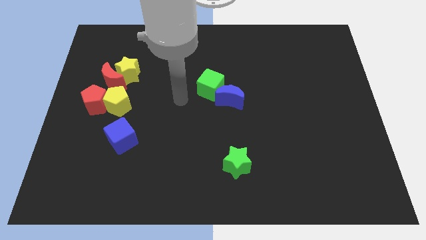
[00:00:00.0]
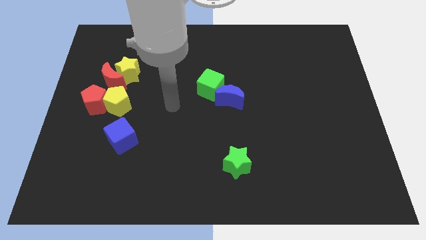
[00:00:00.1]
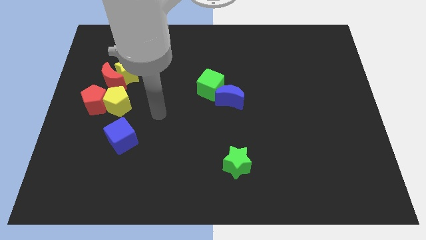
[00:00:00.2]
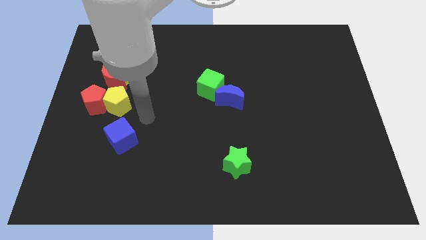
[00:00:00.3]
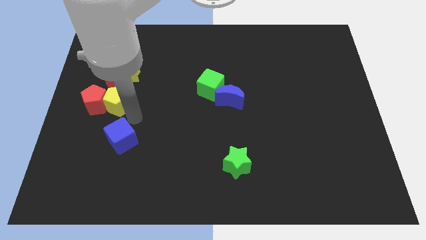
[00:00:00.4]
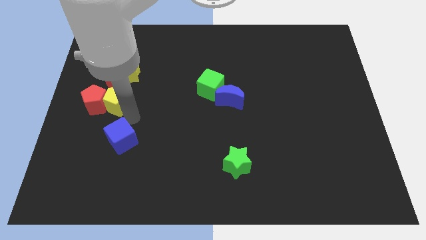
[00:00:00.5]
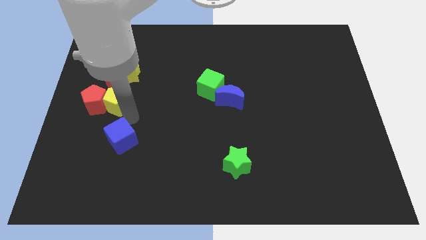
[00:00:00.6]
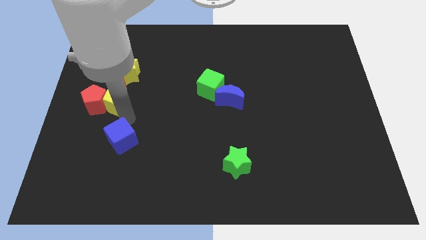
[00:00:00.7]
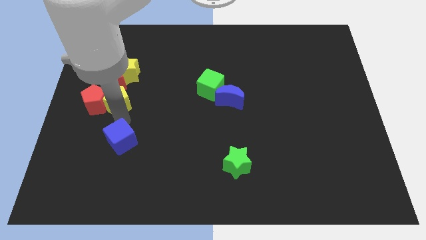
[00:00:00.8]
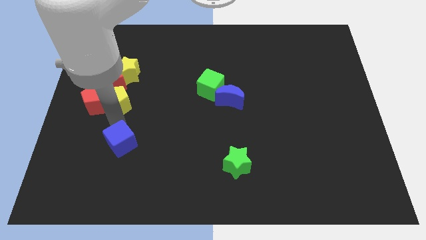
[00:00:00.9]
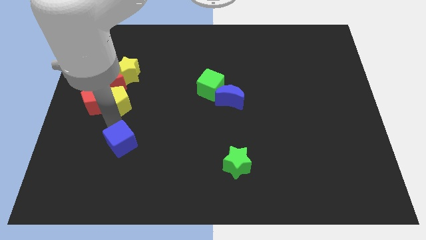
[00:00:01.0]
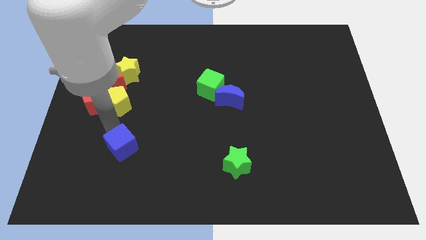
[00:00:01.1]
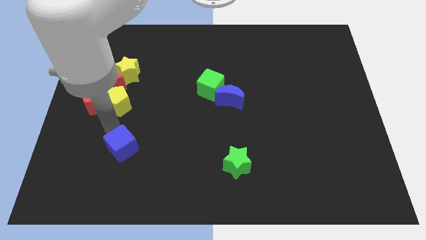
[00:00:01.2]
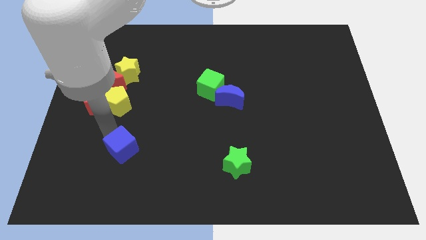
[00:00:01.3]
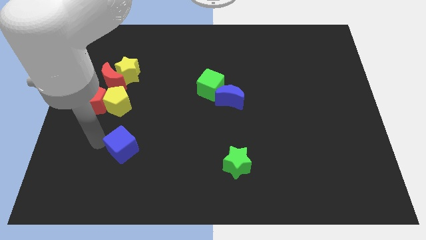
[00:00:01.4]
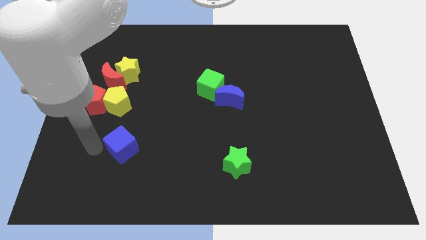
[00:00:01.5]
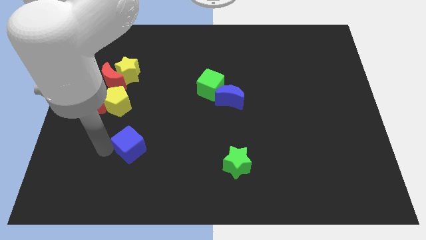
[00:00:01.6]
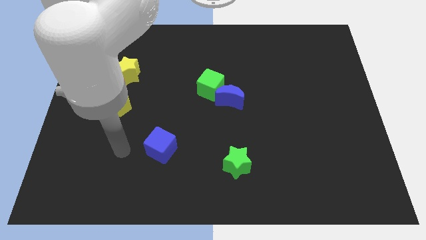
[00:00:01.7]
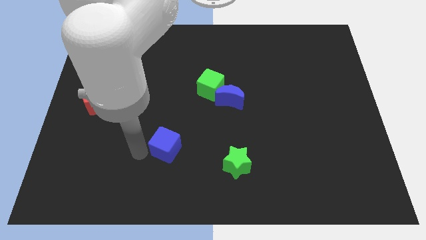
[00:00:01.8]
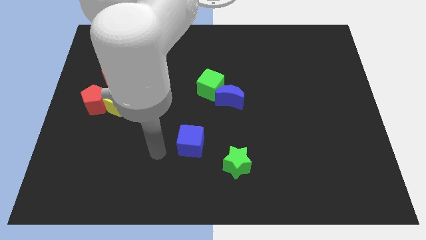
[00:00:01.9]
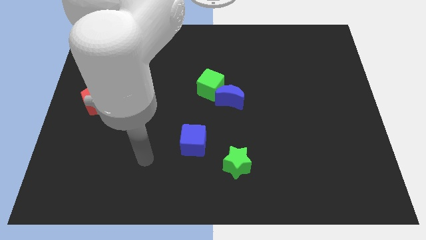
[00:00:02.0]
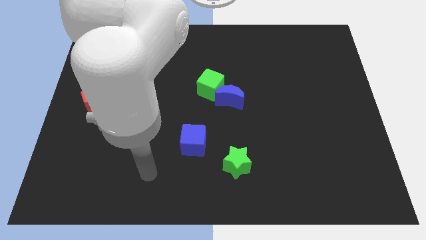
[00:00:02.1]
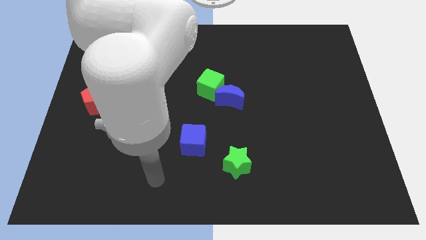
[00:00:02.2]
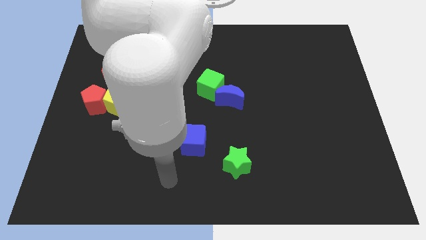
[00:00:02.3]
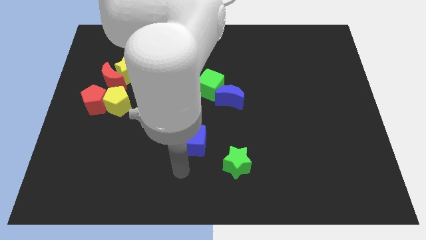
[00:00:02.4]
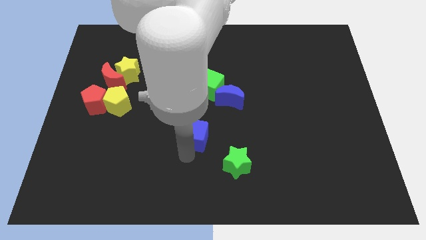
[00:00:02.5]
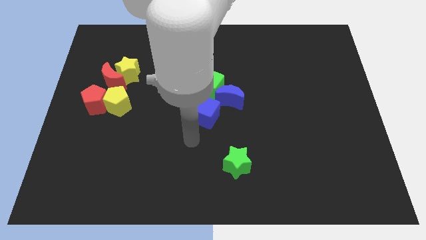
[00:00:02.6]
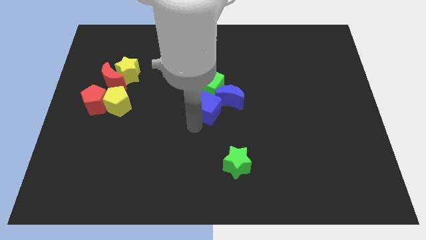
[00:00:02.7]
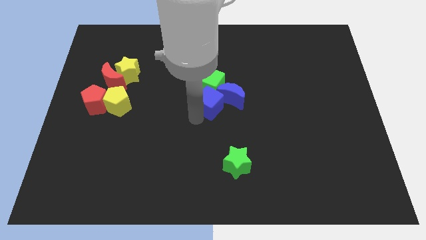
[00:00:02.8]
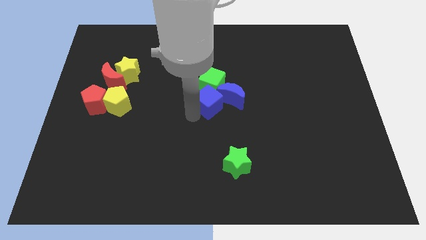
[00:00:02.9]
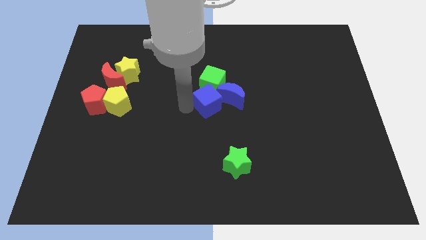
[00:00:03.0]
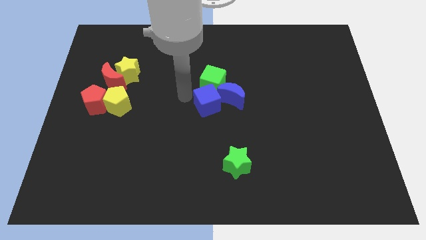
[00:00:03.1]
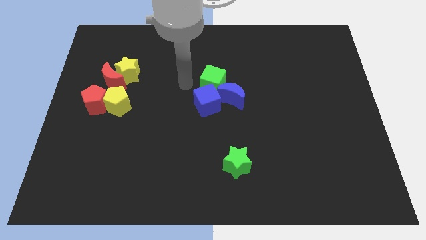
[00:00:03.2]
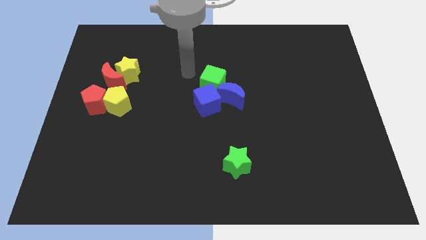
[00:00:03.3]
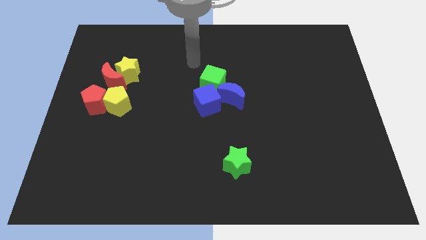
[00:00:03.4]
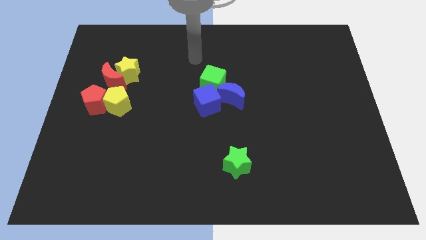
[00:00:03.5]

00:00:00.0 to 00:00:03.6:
add blue cube to the blue crescent and green cube

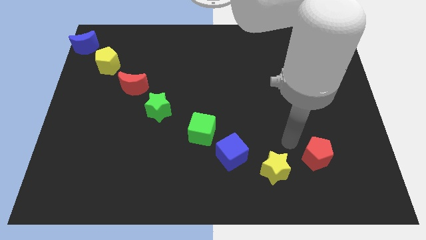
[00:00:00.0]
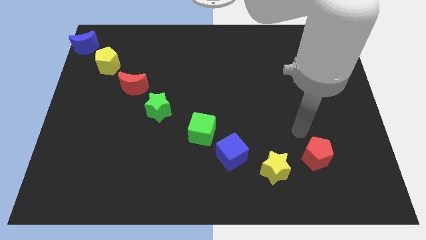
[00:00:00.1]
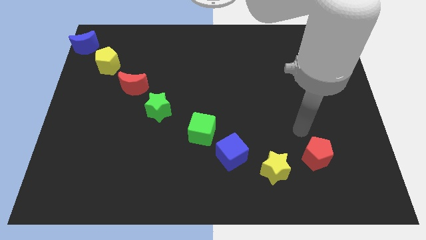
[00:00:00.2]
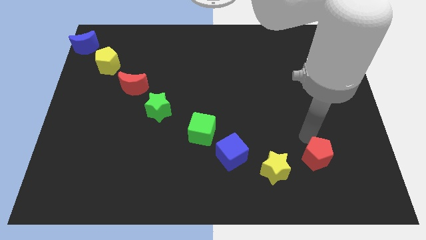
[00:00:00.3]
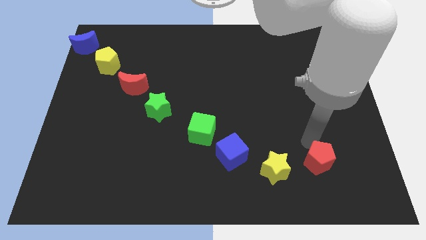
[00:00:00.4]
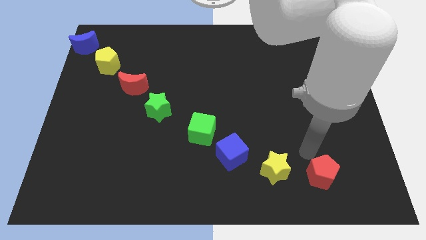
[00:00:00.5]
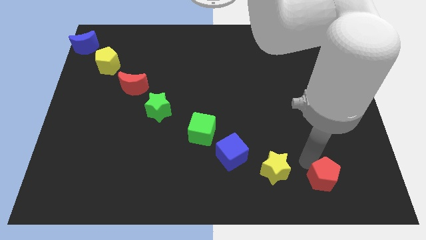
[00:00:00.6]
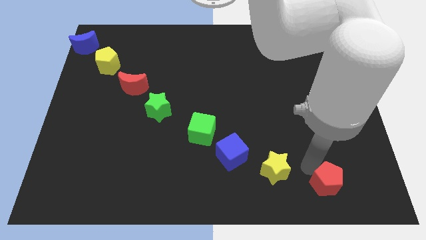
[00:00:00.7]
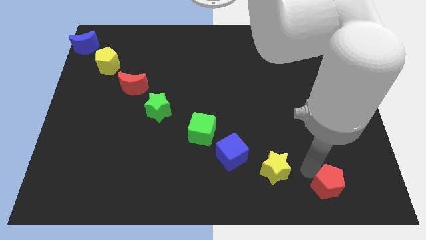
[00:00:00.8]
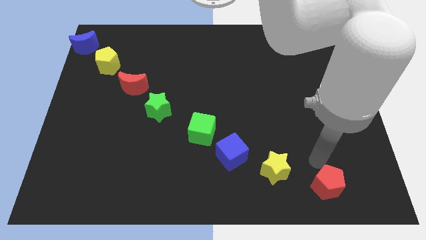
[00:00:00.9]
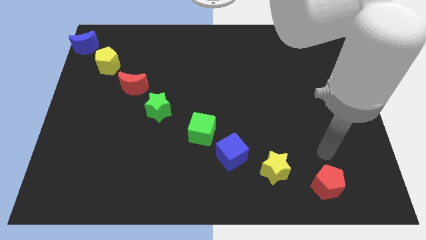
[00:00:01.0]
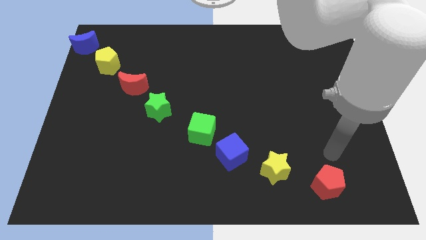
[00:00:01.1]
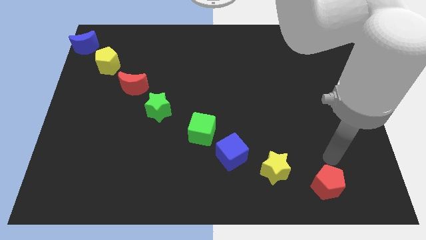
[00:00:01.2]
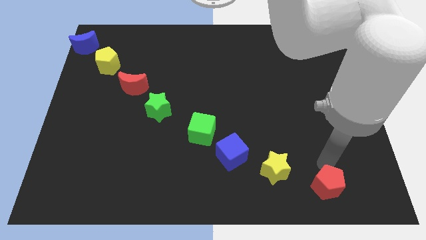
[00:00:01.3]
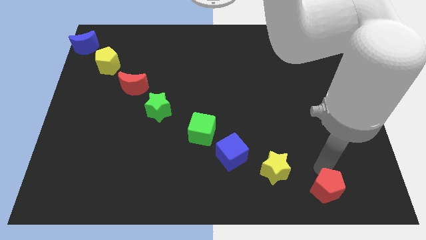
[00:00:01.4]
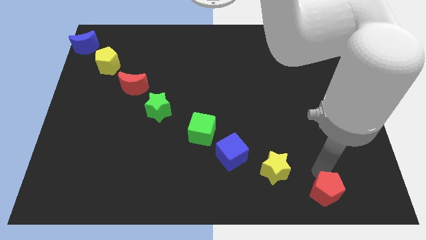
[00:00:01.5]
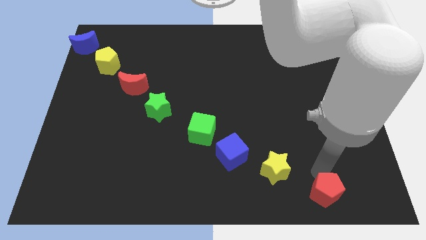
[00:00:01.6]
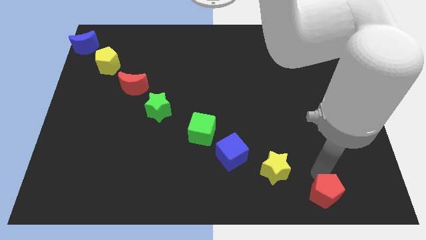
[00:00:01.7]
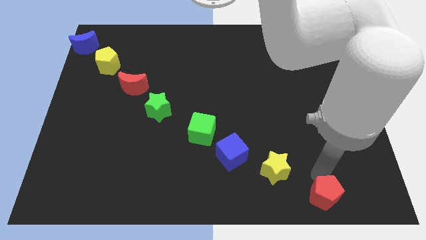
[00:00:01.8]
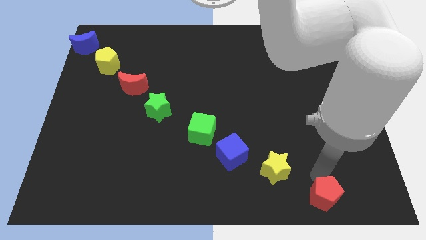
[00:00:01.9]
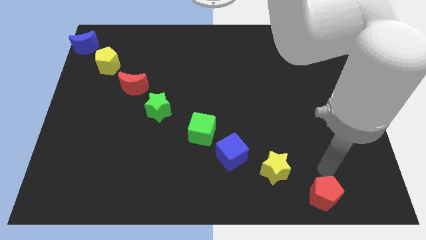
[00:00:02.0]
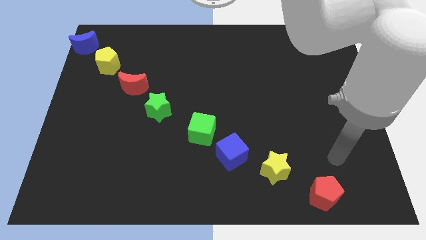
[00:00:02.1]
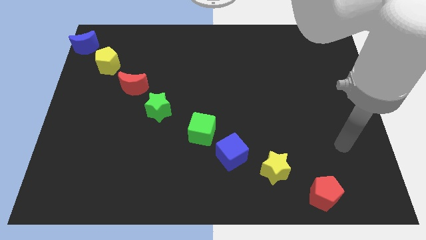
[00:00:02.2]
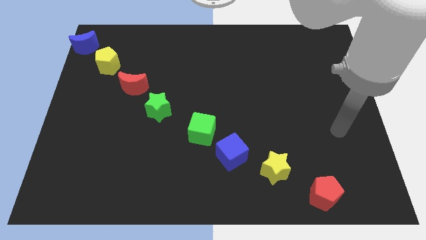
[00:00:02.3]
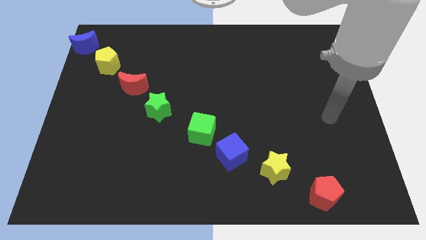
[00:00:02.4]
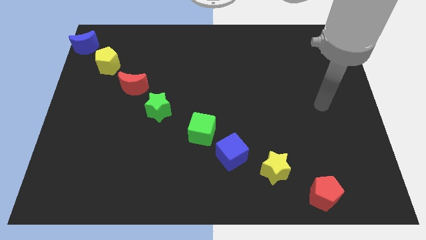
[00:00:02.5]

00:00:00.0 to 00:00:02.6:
move the red pentagon diagonal to the yellow star

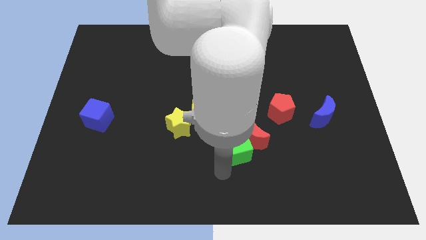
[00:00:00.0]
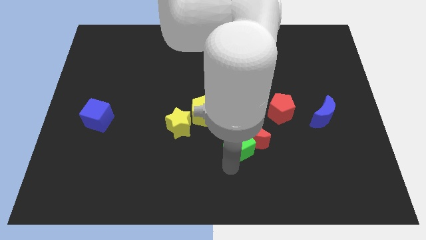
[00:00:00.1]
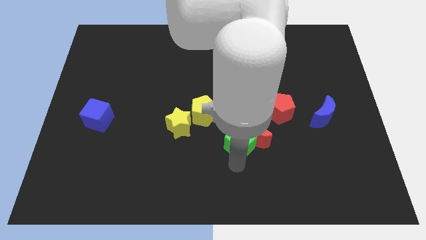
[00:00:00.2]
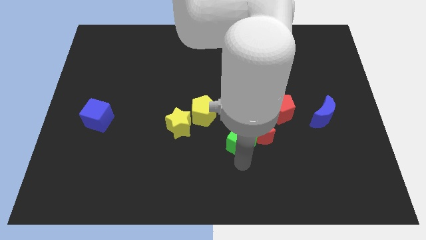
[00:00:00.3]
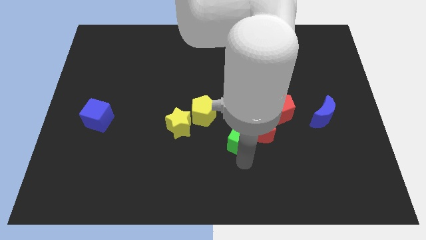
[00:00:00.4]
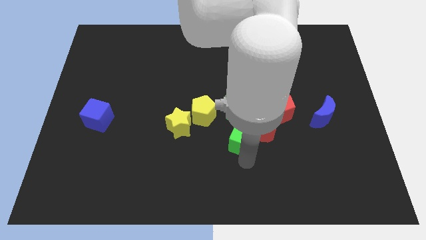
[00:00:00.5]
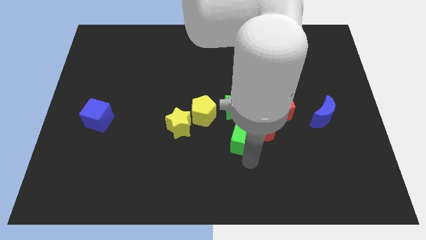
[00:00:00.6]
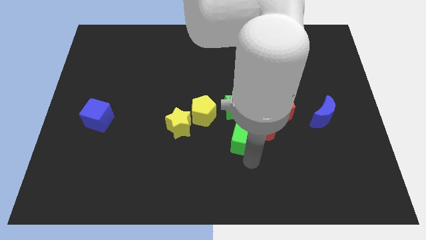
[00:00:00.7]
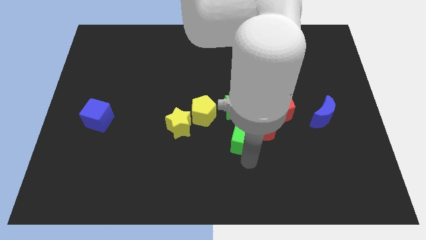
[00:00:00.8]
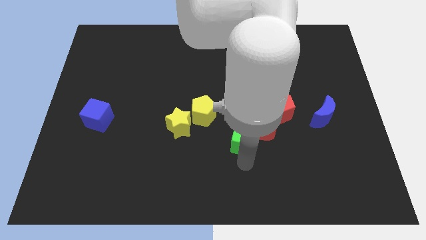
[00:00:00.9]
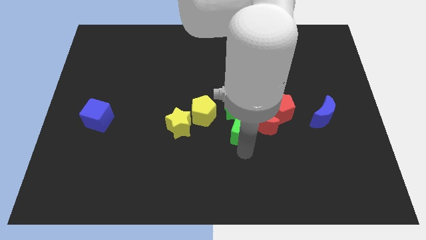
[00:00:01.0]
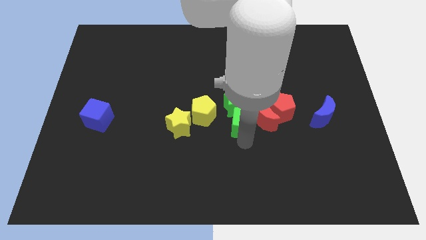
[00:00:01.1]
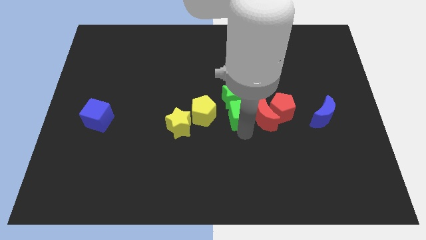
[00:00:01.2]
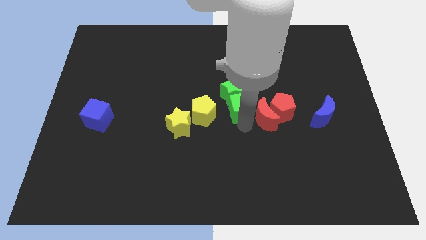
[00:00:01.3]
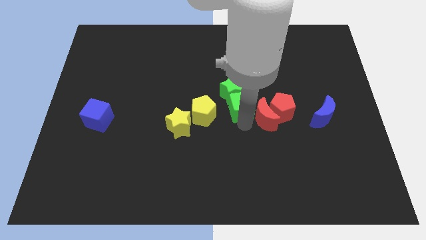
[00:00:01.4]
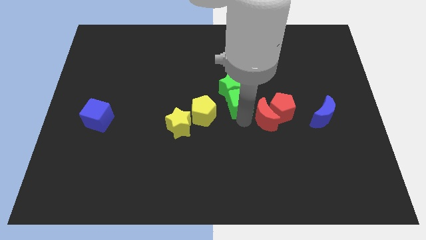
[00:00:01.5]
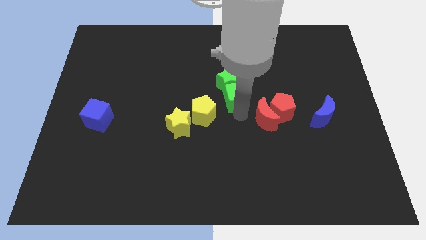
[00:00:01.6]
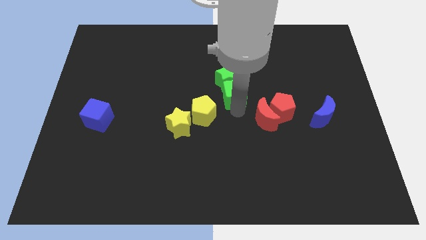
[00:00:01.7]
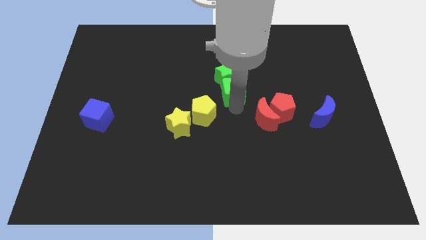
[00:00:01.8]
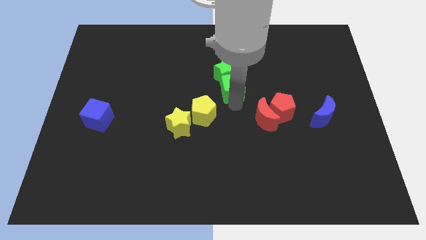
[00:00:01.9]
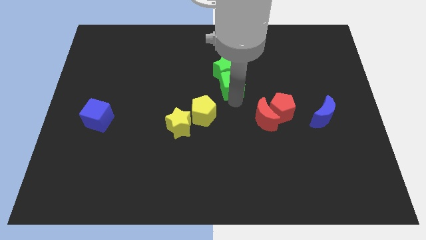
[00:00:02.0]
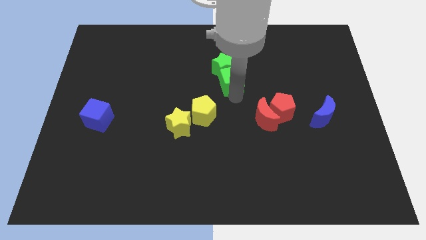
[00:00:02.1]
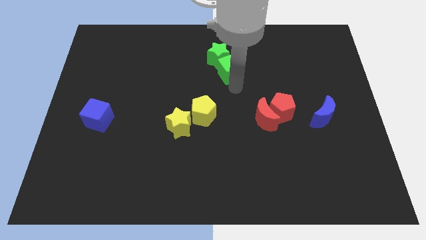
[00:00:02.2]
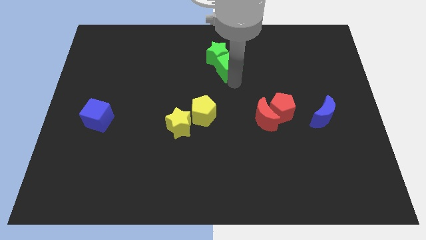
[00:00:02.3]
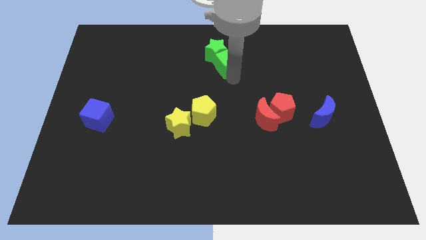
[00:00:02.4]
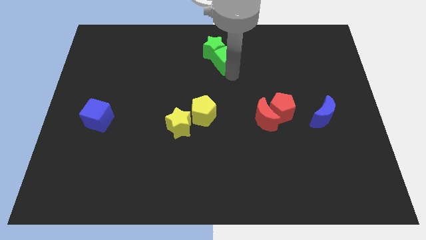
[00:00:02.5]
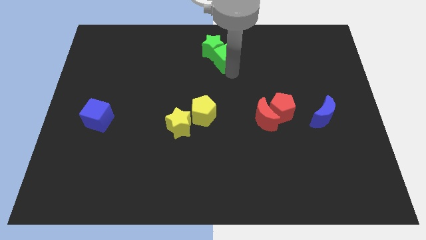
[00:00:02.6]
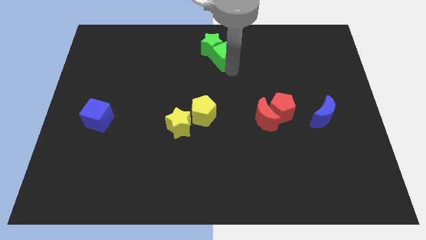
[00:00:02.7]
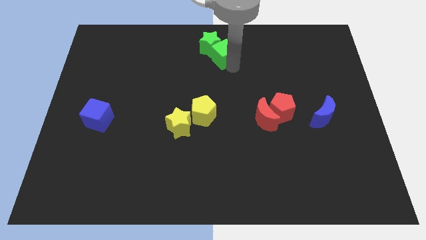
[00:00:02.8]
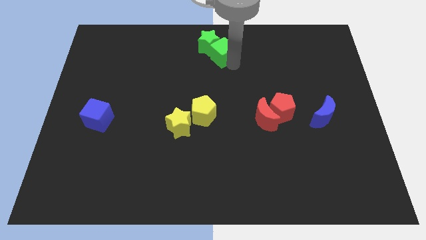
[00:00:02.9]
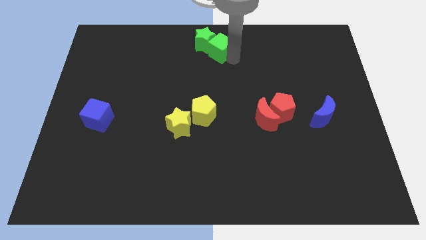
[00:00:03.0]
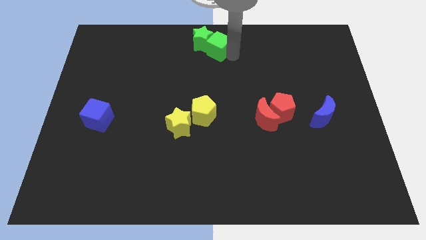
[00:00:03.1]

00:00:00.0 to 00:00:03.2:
separate green blocks from red moon
